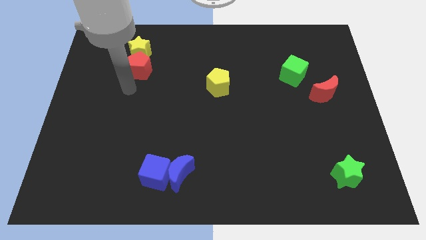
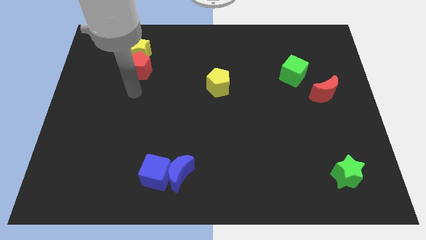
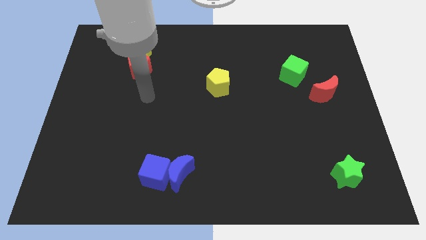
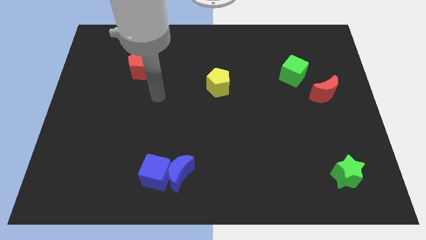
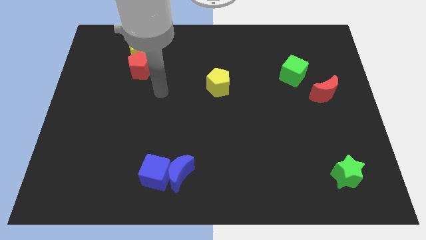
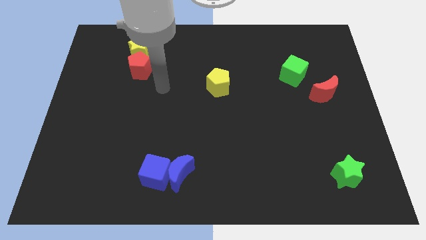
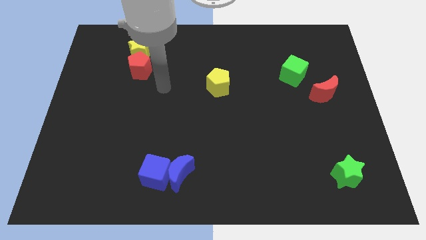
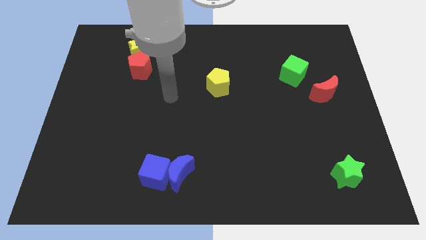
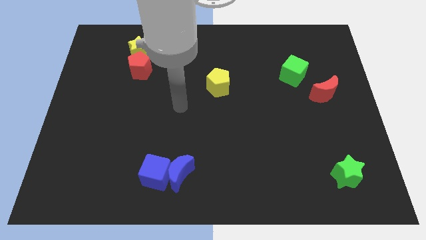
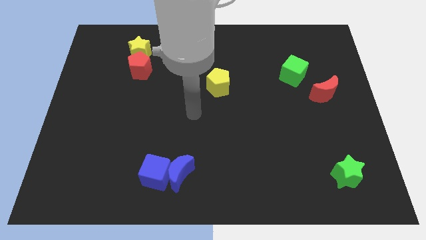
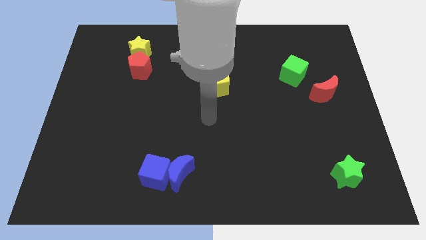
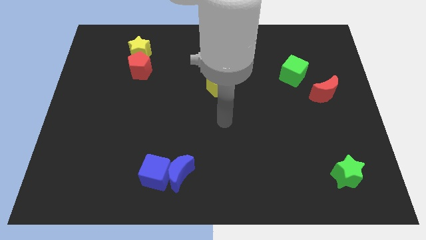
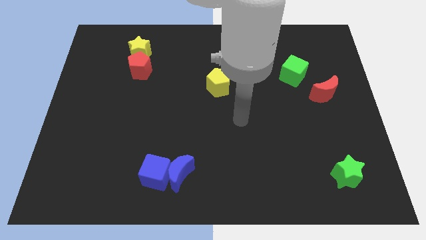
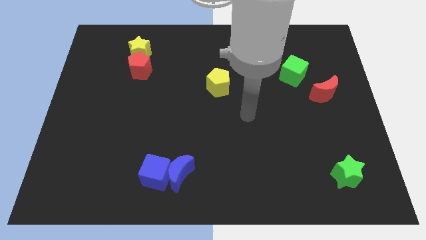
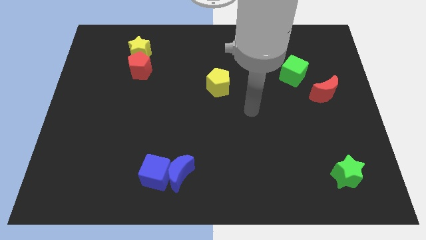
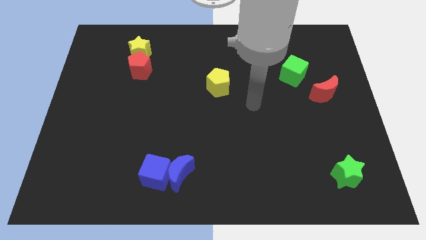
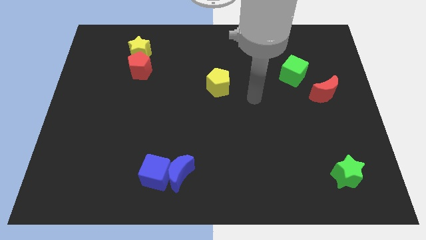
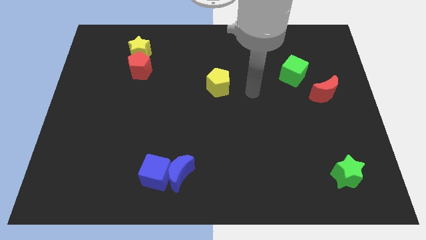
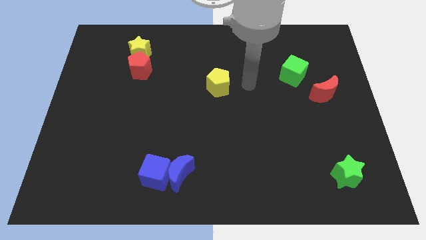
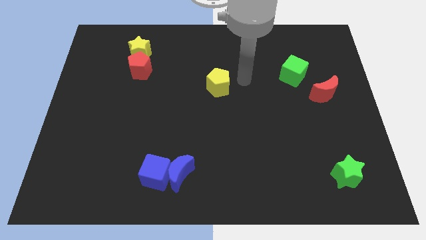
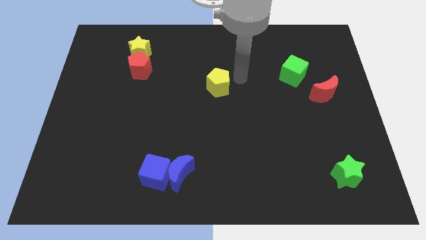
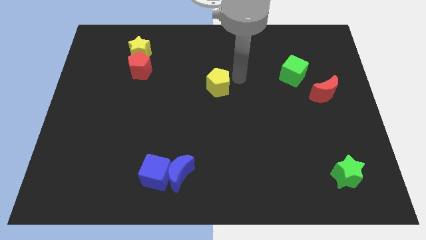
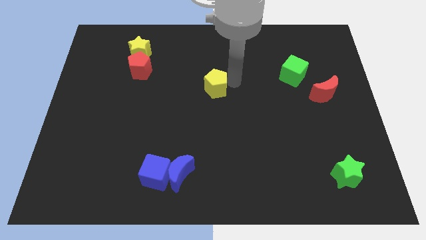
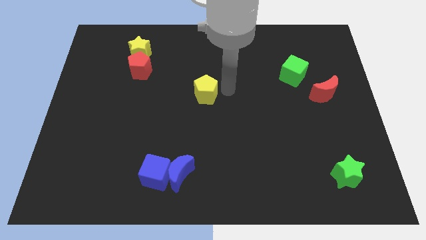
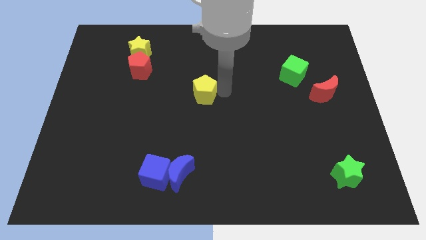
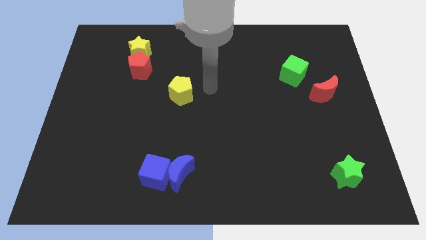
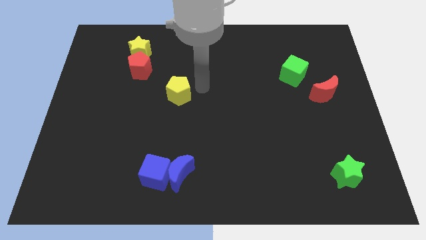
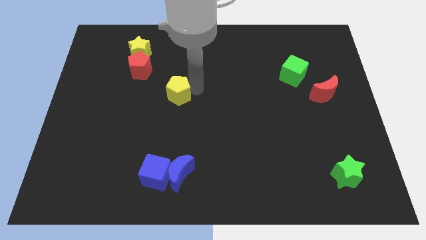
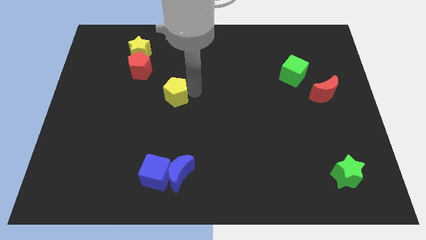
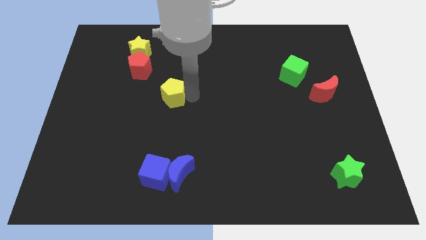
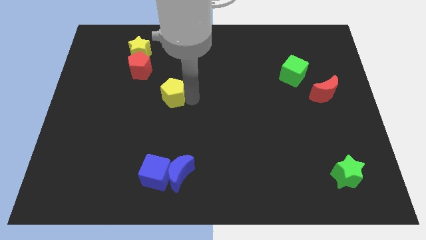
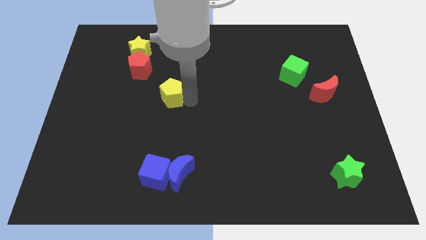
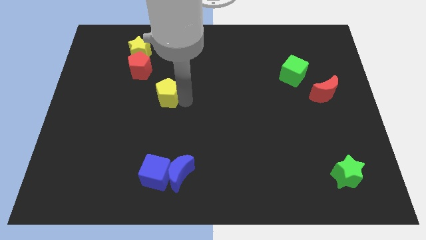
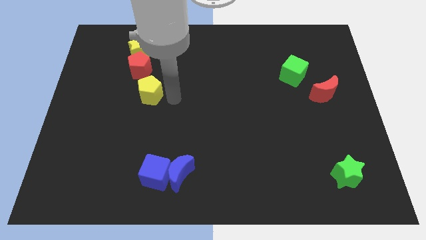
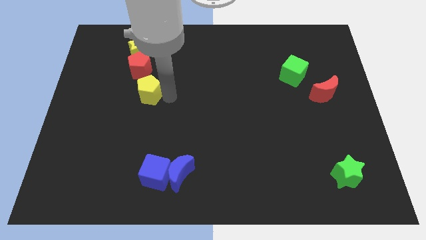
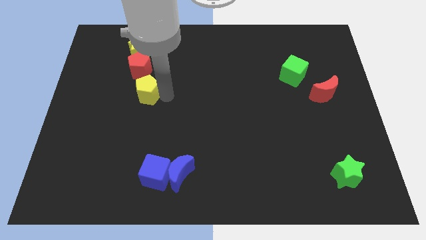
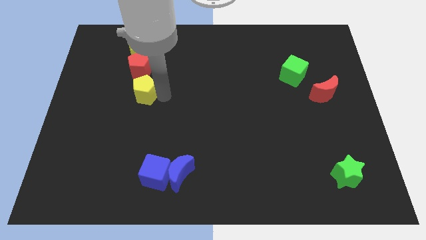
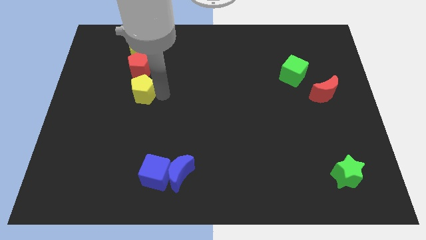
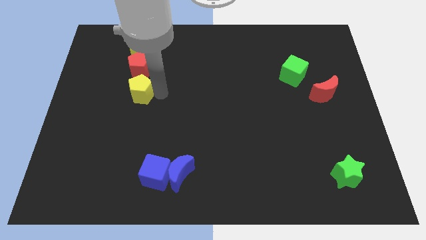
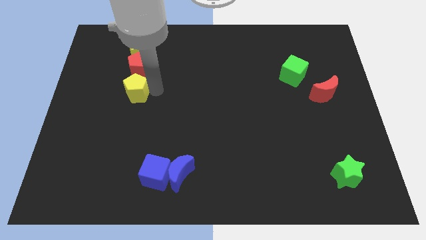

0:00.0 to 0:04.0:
place yellow pentagon to the bottom of red pentagon

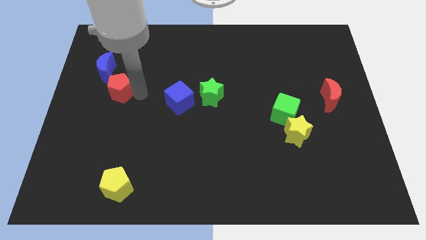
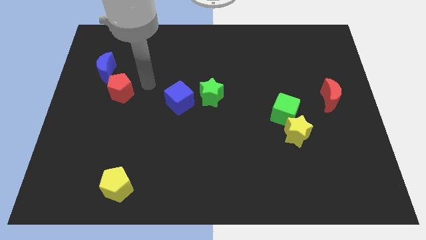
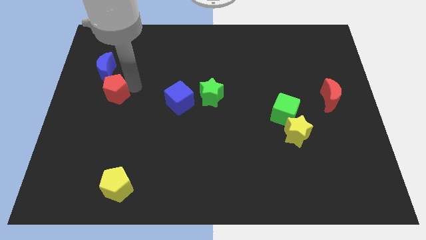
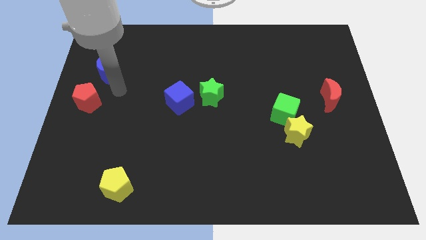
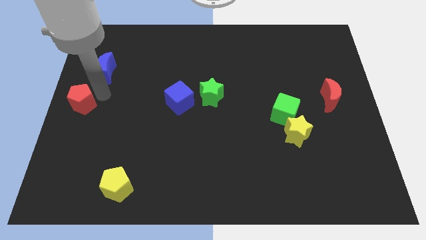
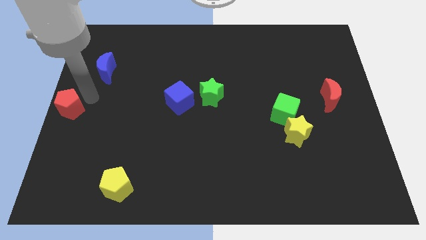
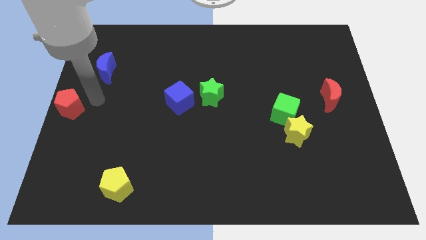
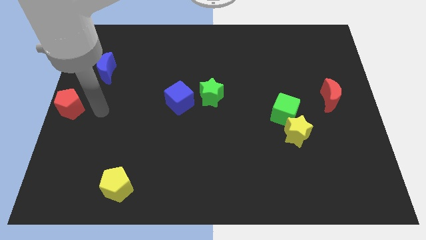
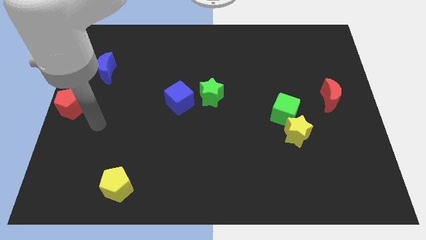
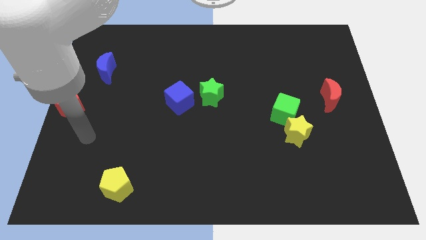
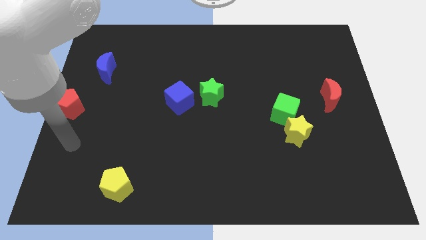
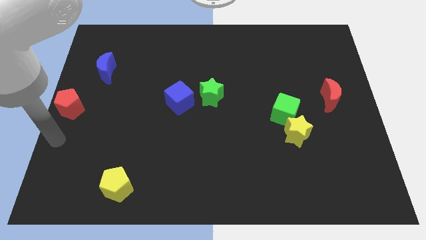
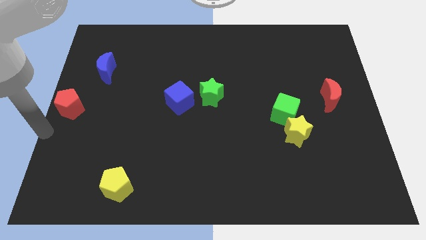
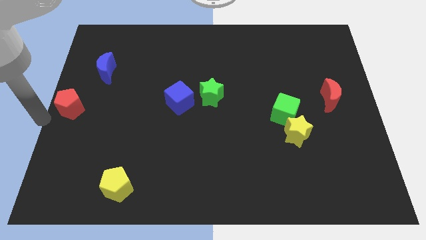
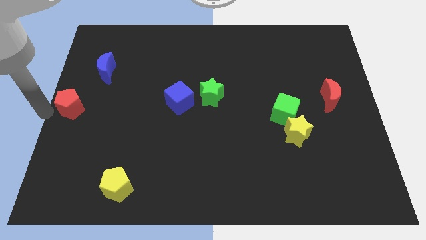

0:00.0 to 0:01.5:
push the red pentagon to the left

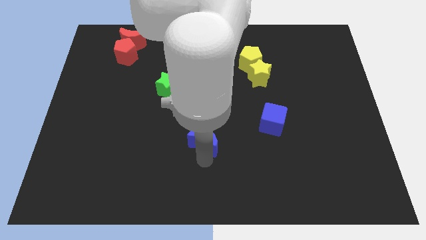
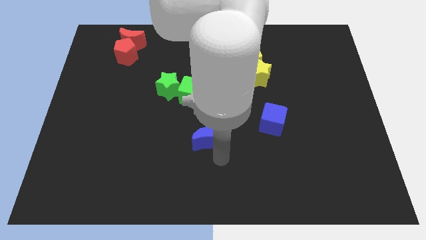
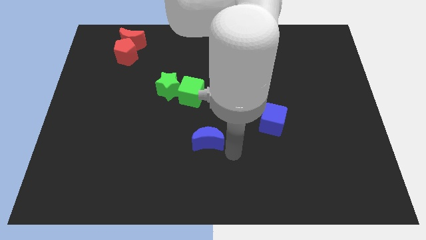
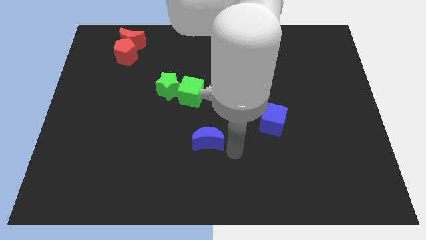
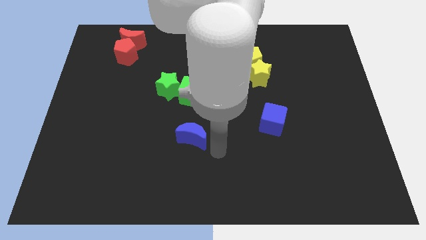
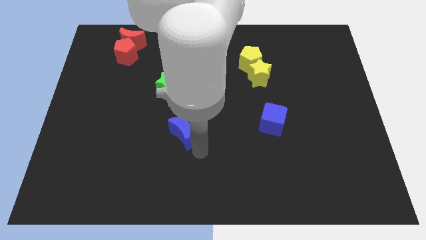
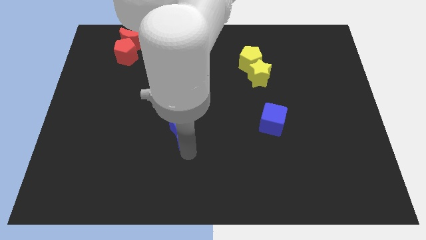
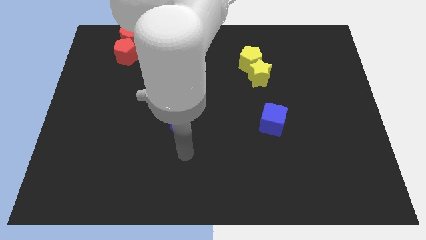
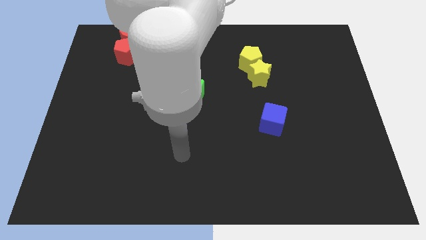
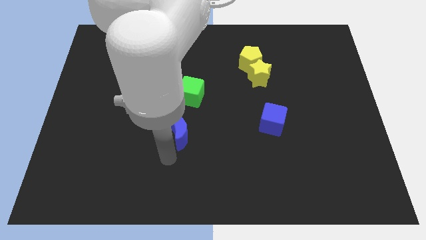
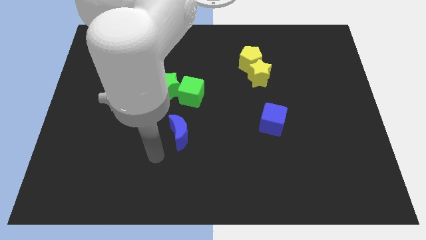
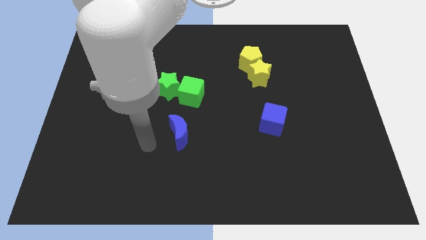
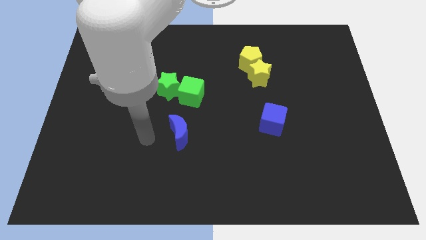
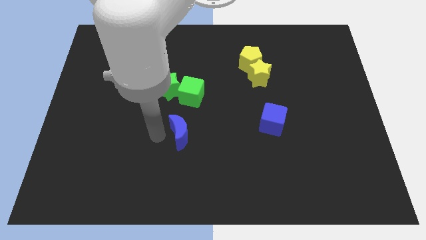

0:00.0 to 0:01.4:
put the blue moon below the green blocks

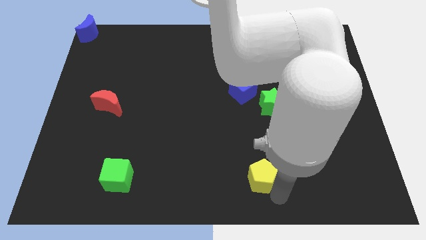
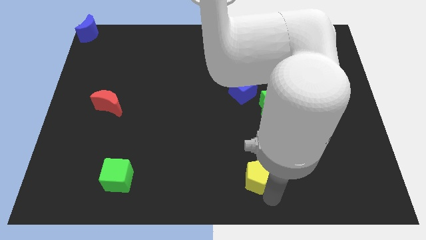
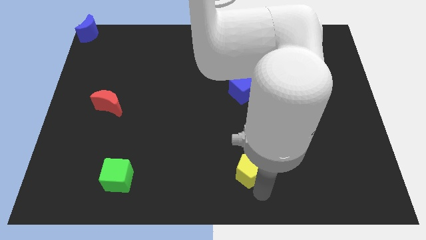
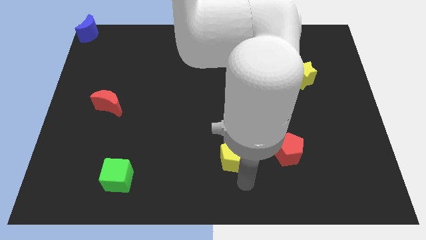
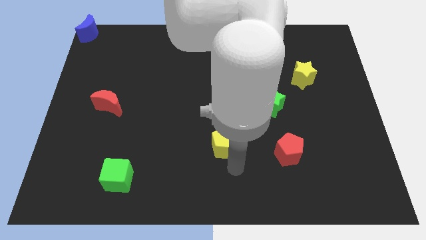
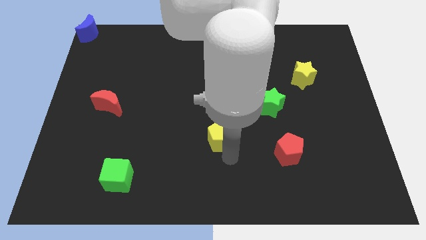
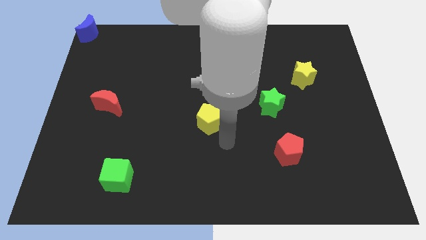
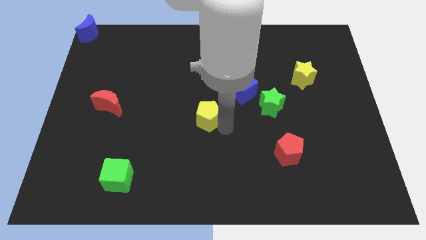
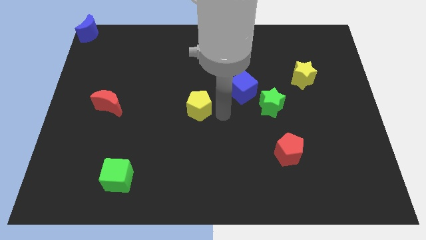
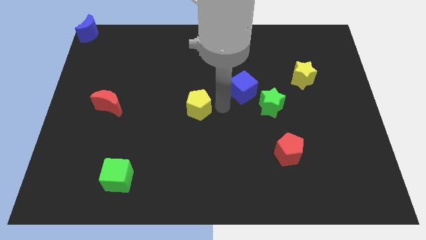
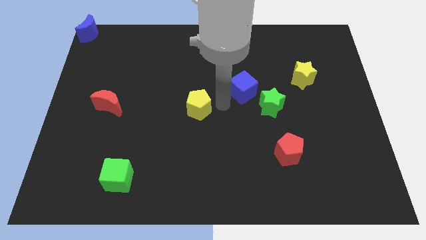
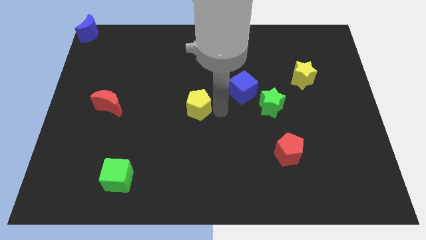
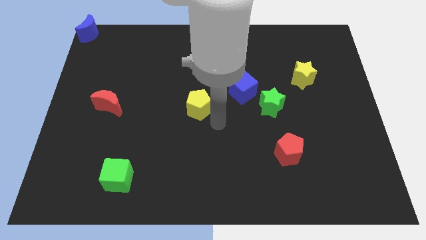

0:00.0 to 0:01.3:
put the yellow pentagon parallel left to the green star

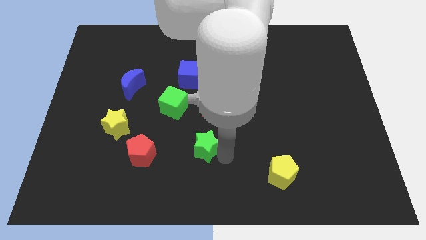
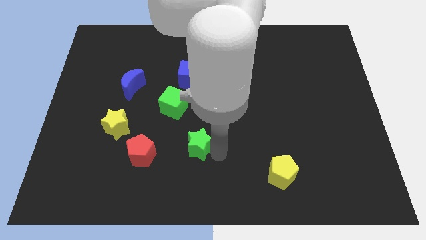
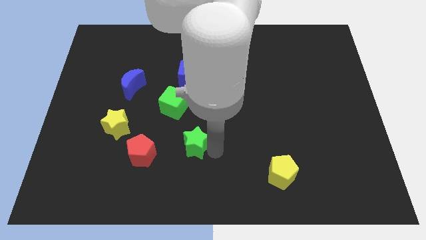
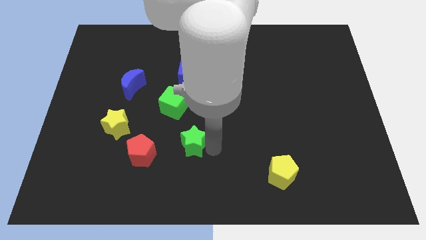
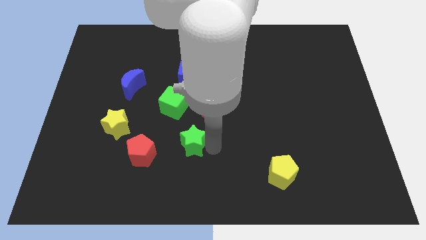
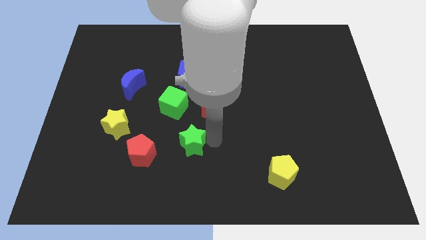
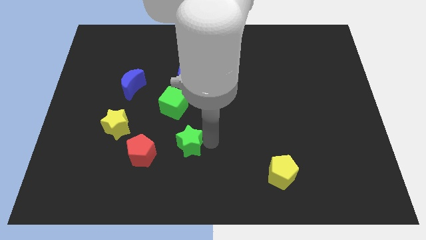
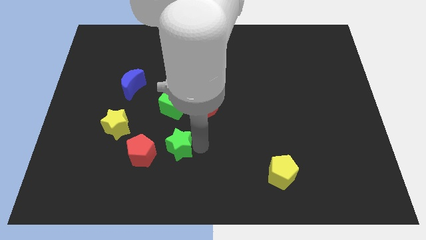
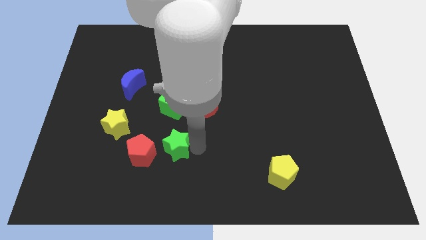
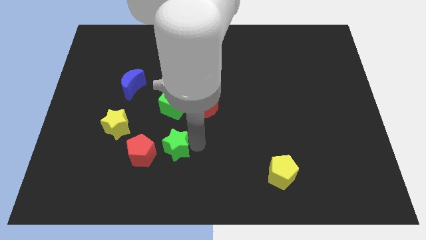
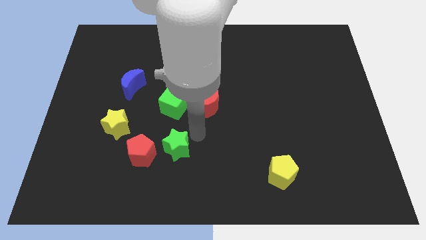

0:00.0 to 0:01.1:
push the green star slightly to the left side
